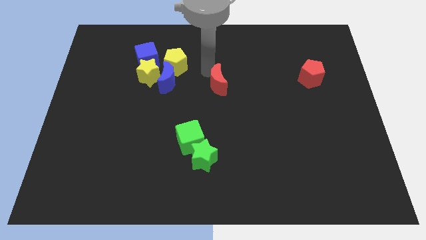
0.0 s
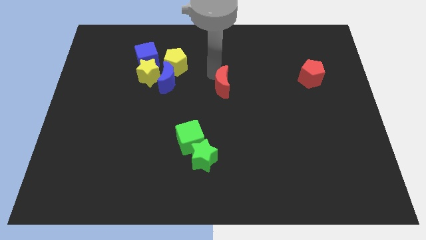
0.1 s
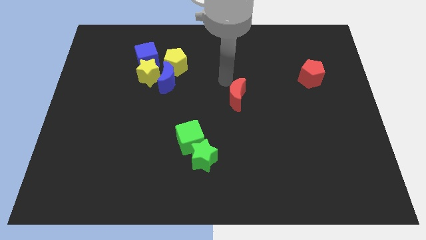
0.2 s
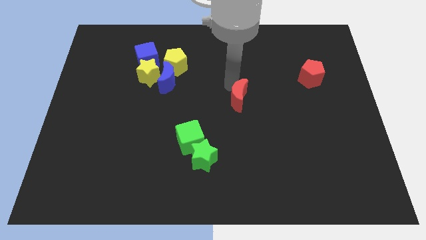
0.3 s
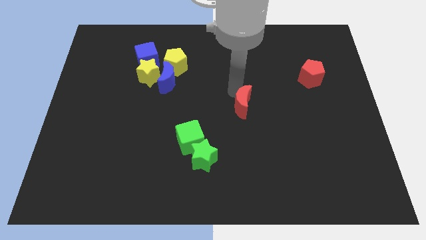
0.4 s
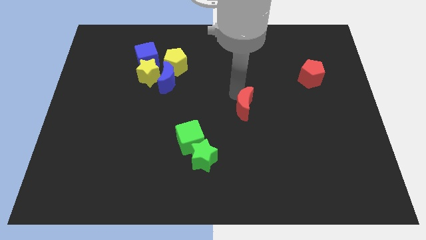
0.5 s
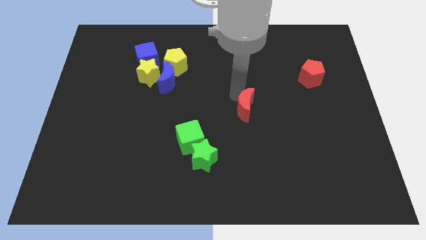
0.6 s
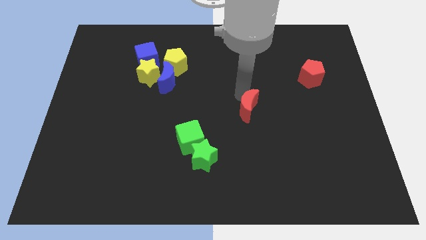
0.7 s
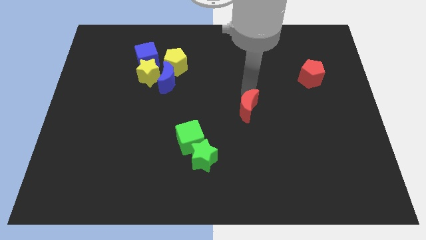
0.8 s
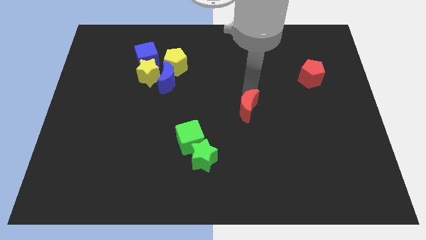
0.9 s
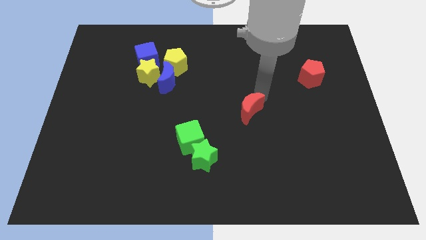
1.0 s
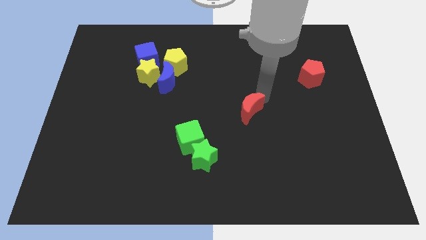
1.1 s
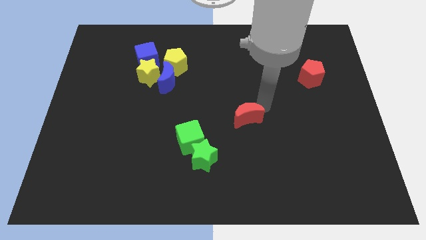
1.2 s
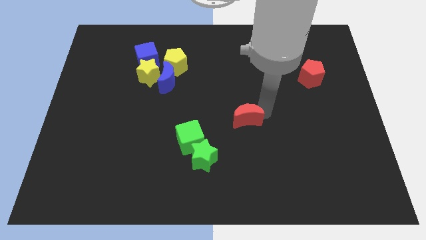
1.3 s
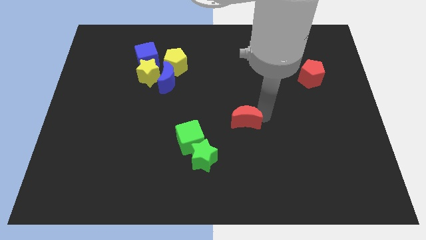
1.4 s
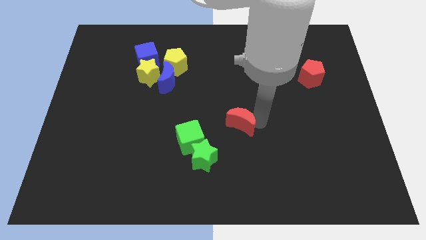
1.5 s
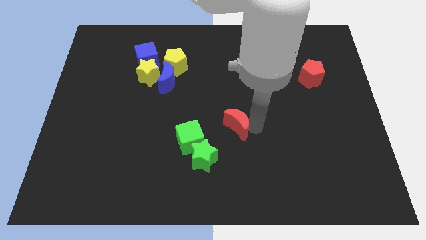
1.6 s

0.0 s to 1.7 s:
move the red crescent to the right of the green cube

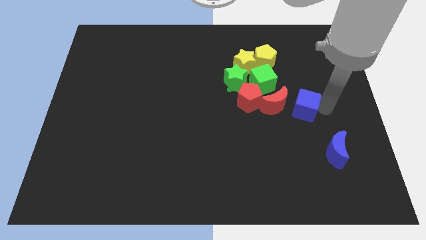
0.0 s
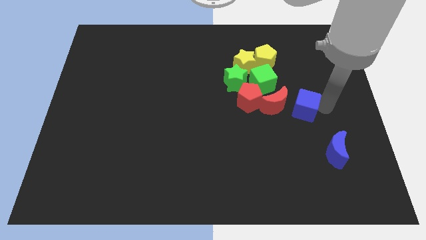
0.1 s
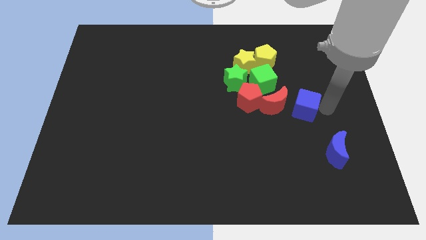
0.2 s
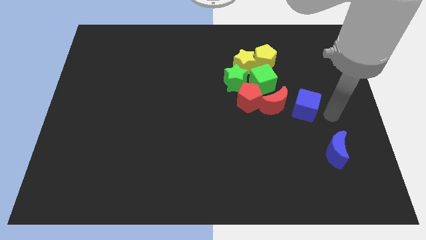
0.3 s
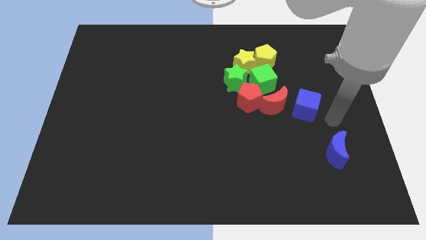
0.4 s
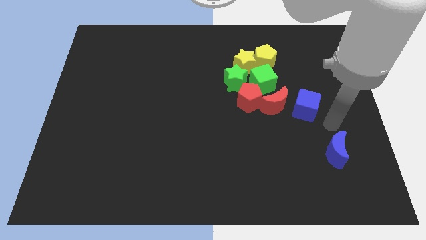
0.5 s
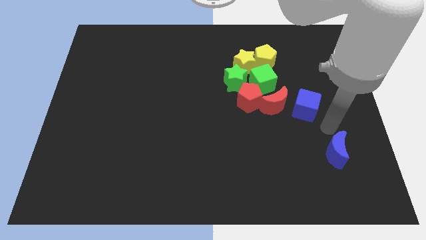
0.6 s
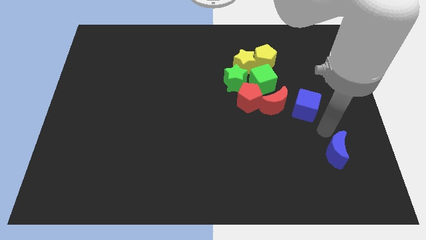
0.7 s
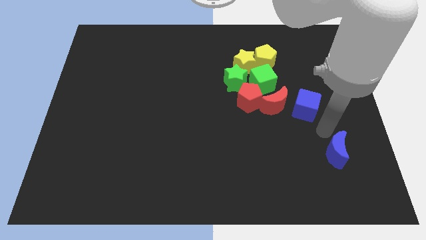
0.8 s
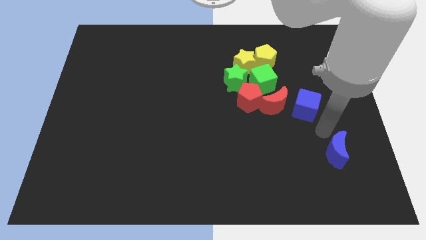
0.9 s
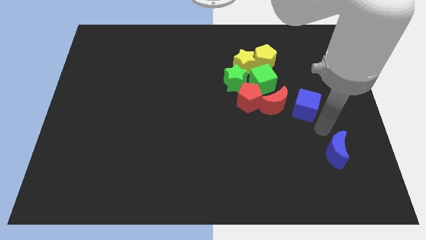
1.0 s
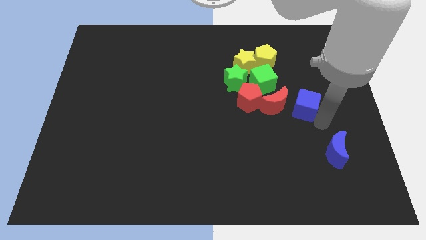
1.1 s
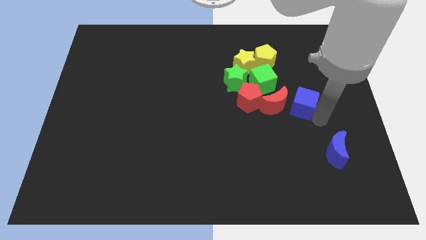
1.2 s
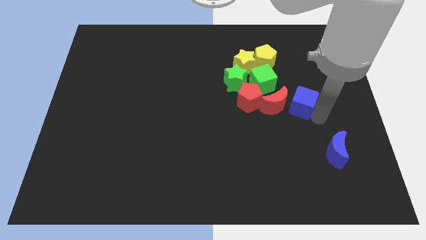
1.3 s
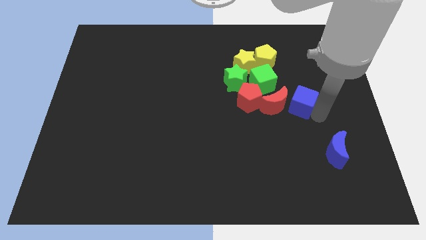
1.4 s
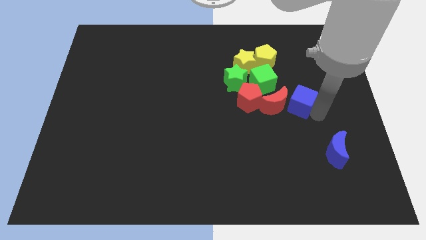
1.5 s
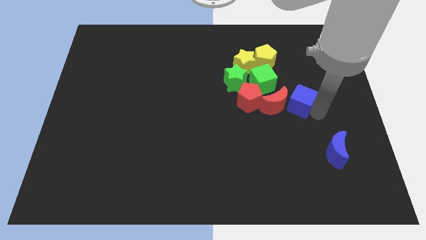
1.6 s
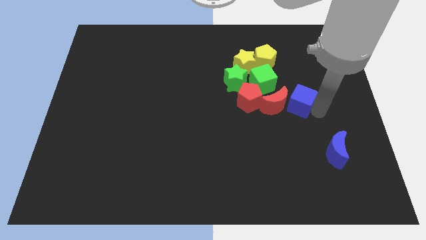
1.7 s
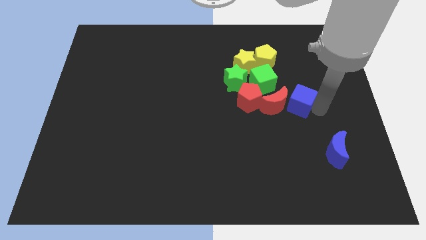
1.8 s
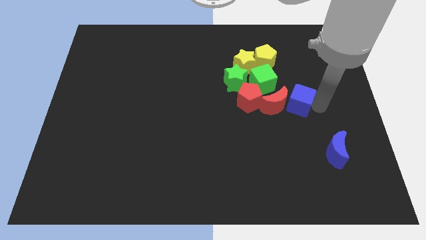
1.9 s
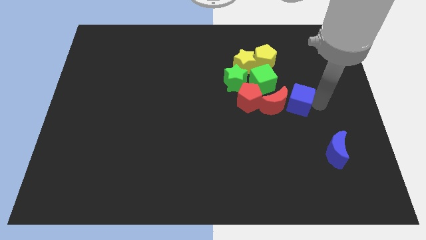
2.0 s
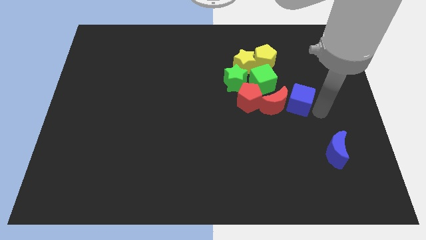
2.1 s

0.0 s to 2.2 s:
push blue cube to the right side of the red crescent

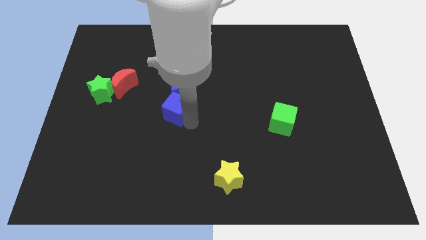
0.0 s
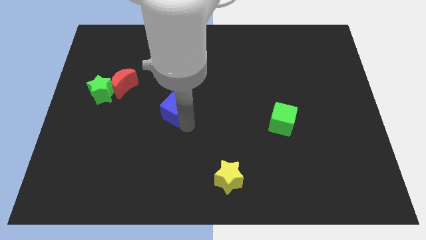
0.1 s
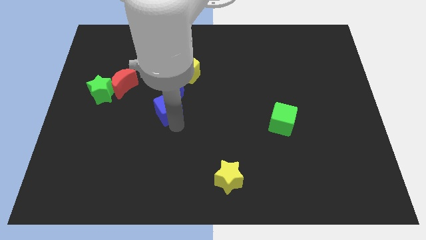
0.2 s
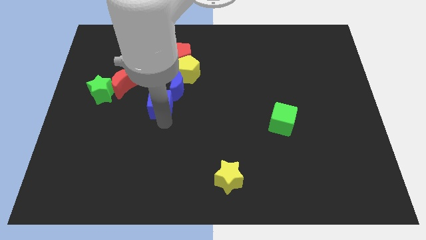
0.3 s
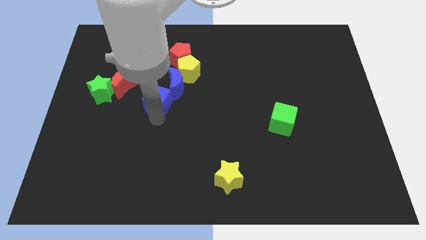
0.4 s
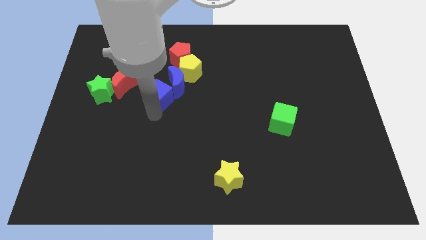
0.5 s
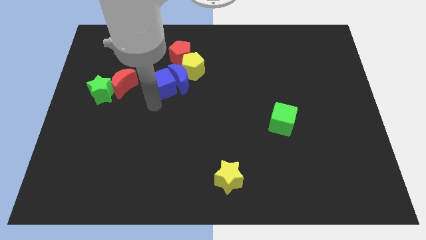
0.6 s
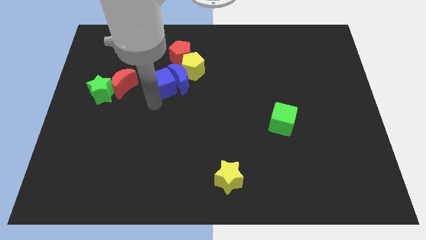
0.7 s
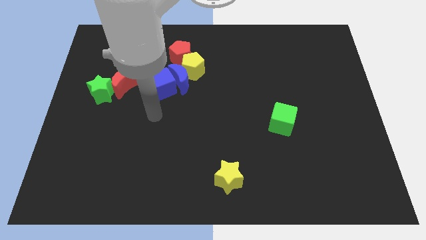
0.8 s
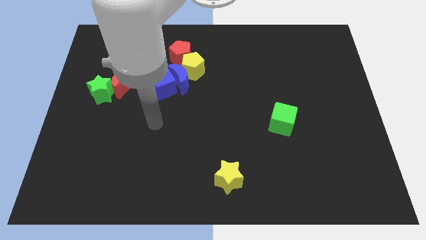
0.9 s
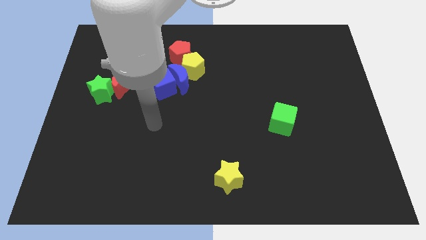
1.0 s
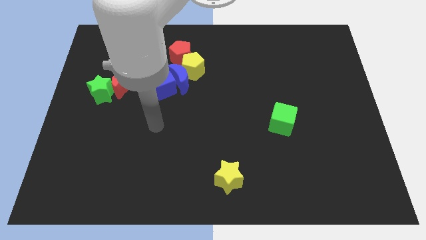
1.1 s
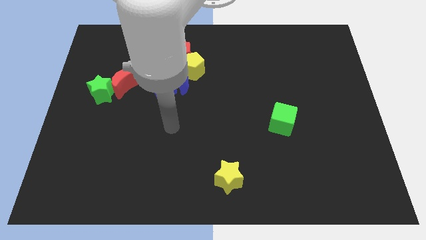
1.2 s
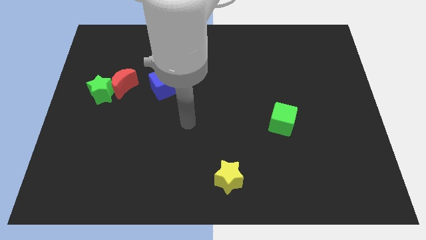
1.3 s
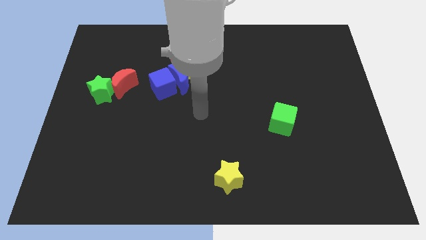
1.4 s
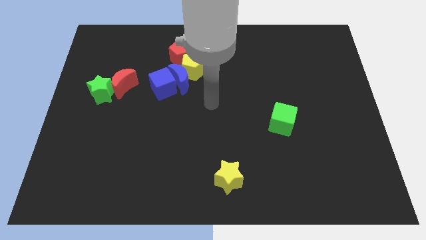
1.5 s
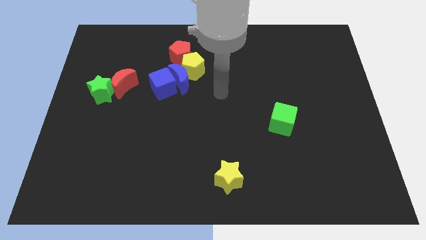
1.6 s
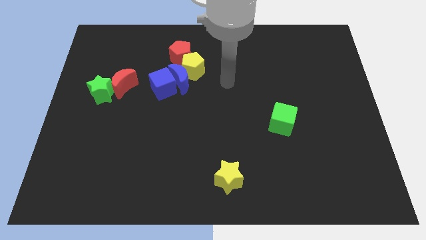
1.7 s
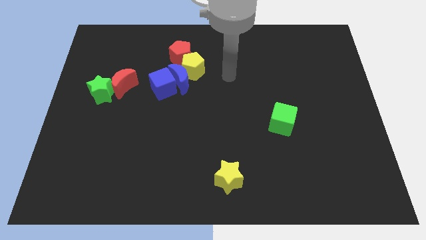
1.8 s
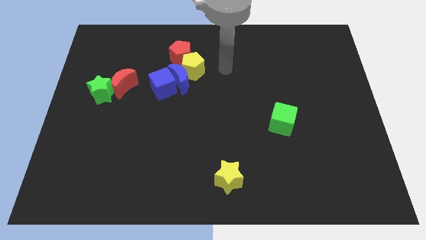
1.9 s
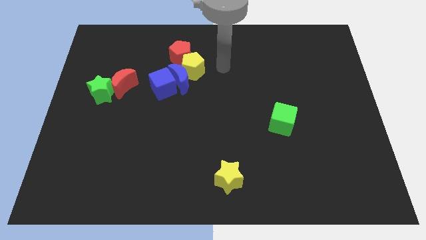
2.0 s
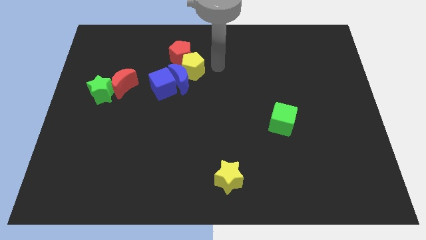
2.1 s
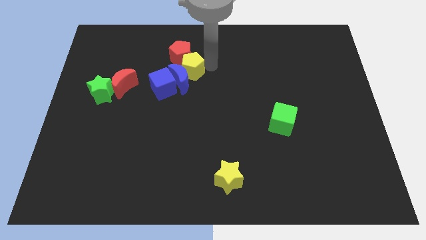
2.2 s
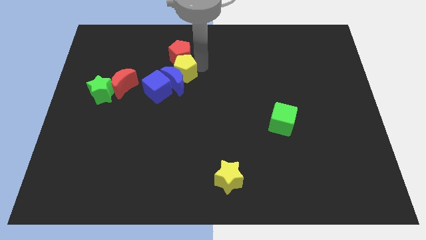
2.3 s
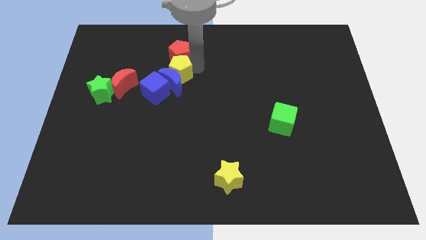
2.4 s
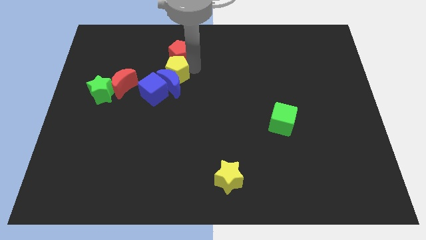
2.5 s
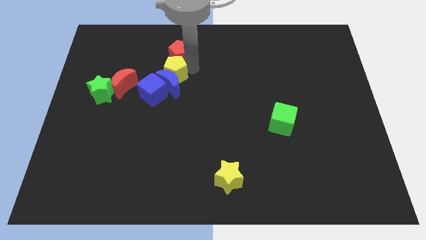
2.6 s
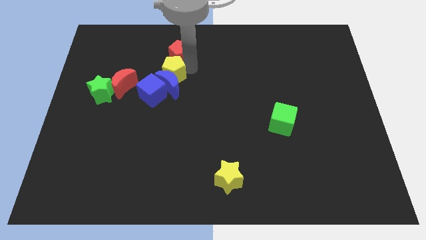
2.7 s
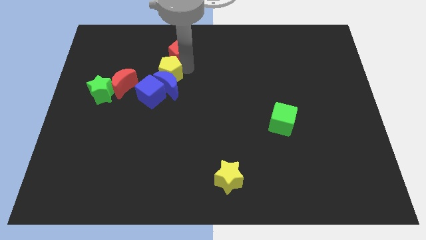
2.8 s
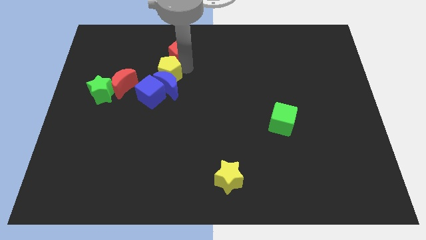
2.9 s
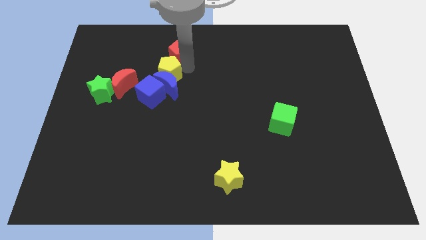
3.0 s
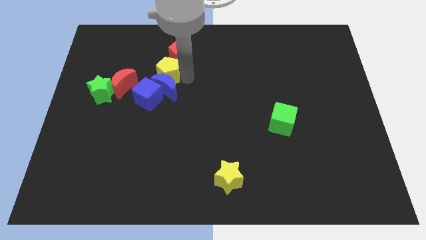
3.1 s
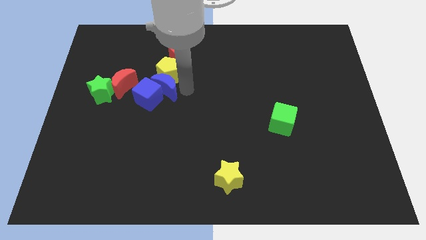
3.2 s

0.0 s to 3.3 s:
arrange the group of blocks at the right side of the red moon

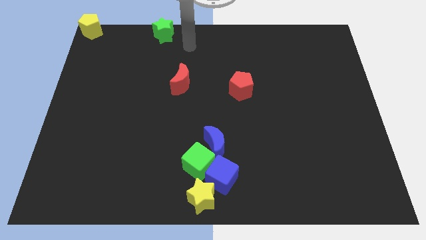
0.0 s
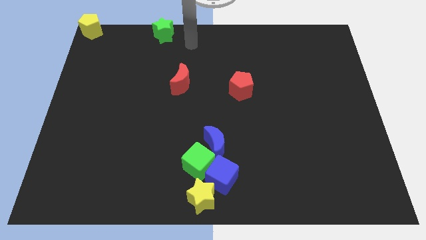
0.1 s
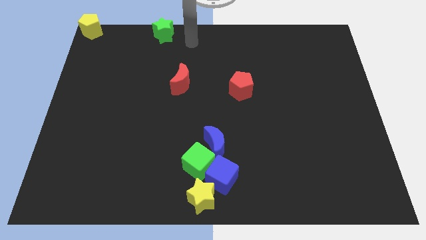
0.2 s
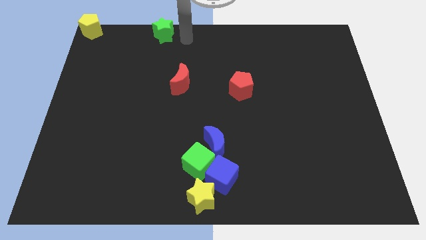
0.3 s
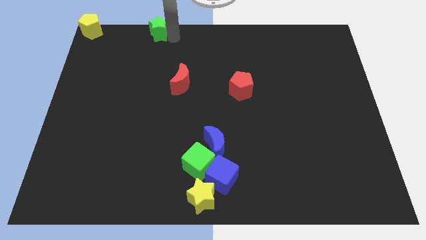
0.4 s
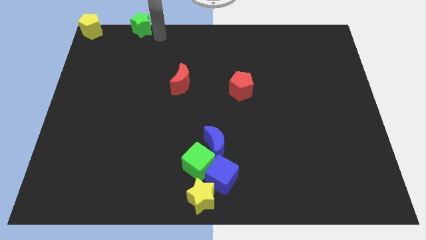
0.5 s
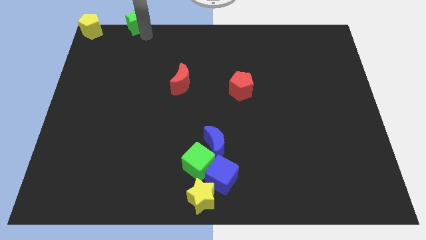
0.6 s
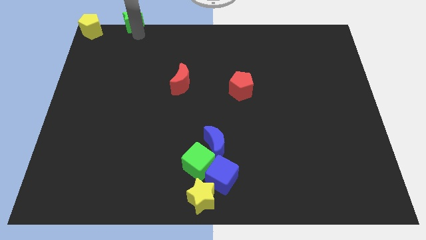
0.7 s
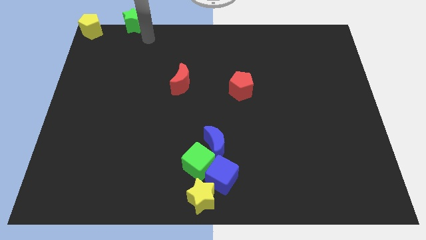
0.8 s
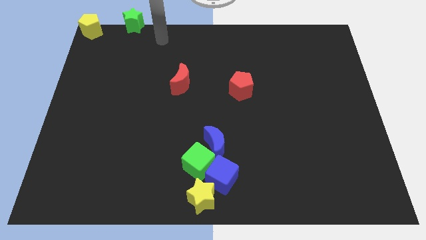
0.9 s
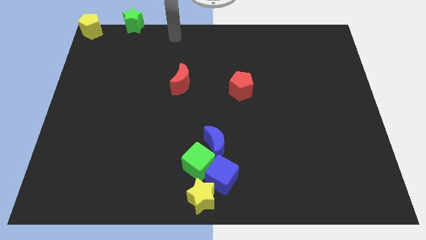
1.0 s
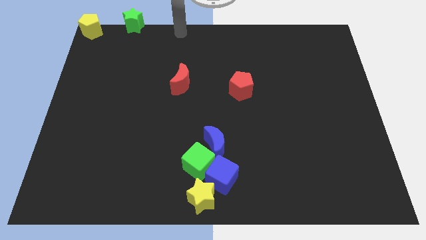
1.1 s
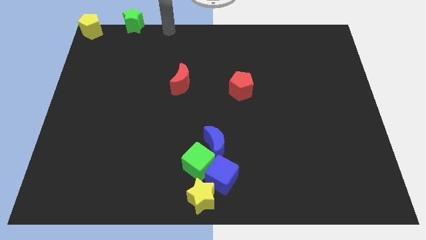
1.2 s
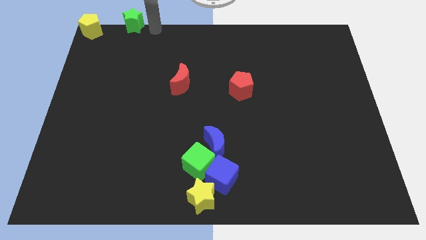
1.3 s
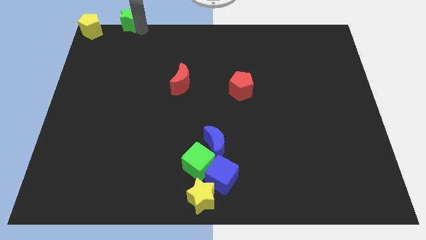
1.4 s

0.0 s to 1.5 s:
push the green star towards the yellow pentagon

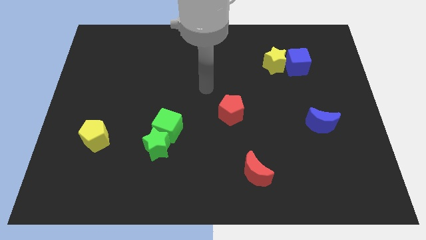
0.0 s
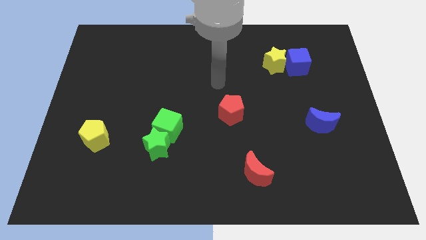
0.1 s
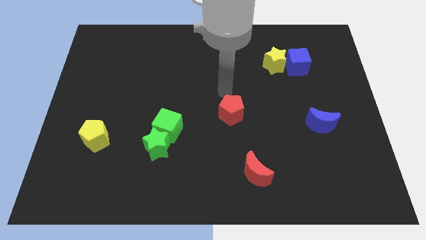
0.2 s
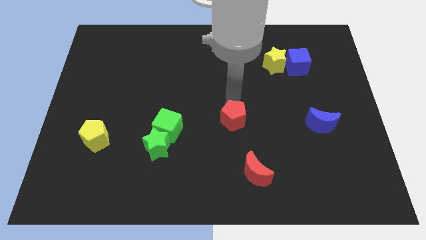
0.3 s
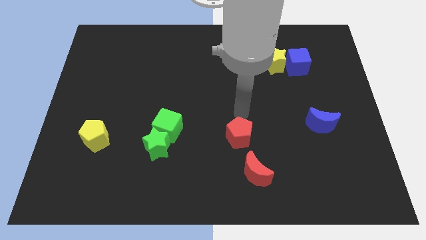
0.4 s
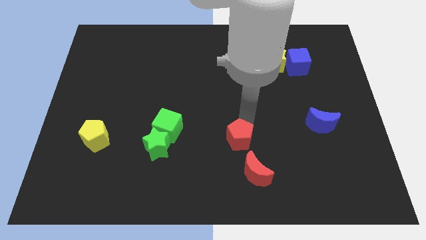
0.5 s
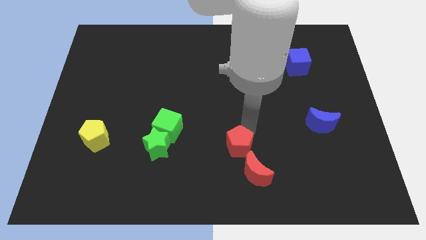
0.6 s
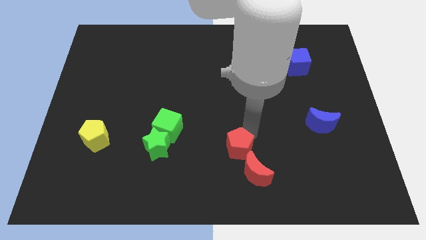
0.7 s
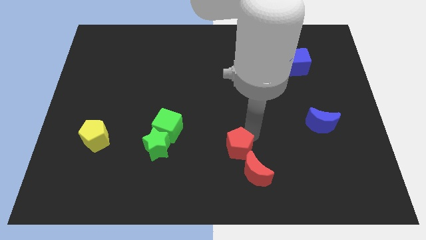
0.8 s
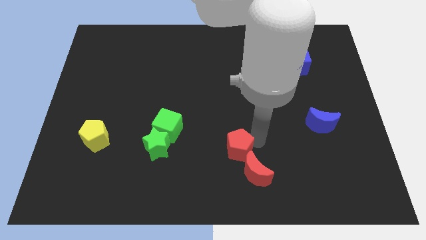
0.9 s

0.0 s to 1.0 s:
move the red pentagon into the red moon
